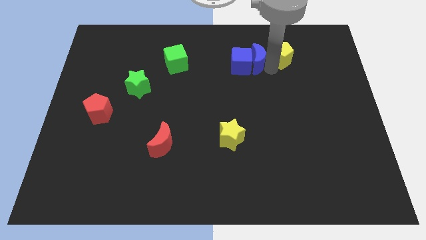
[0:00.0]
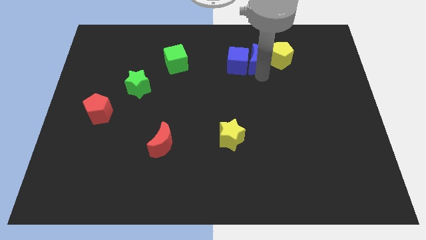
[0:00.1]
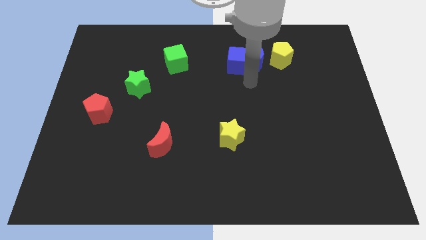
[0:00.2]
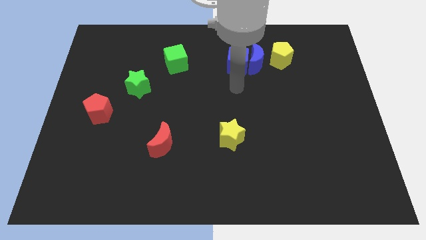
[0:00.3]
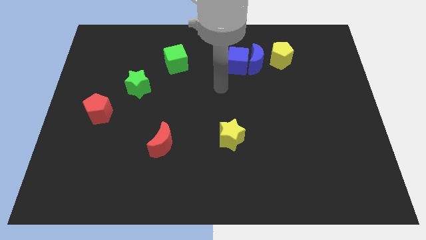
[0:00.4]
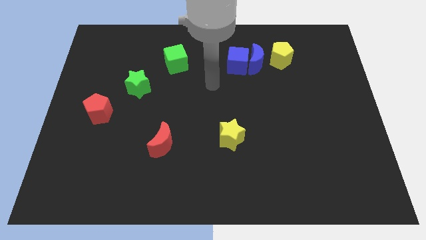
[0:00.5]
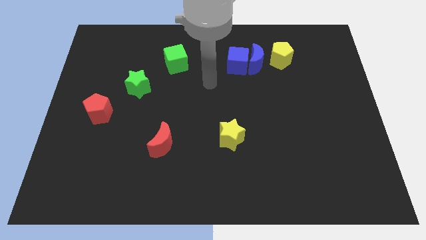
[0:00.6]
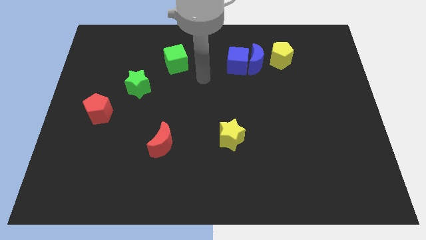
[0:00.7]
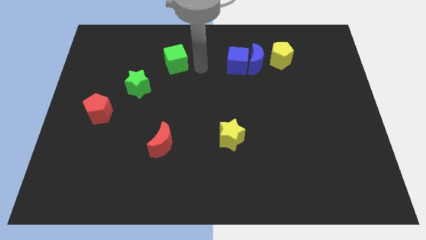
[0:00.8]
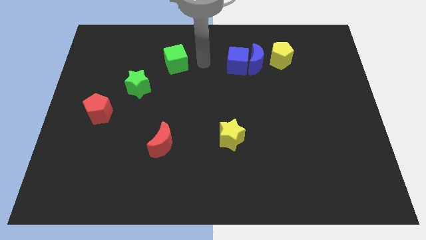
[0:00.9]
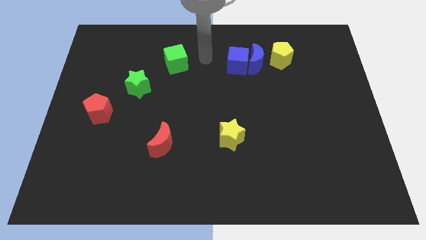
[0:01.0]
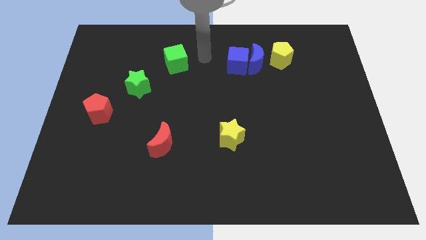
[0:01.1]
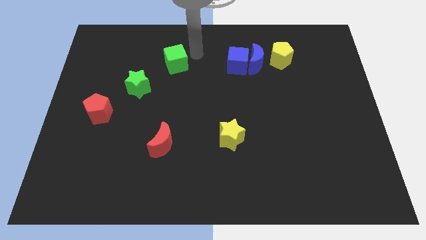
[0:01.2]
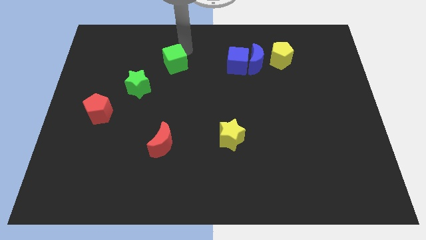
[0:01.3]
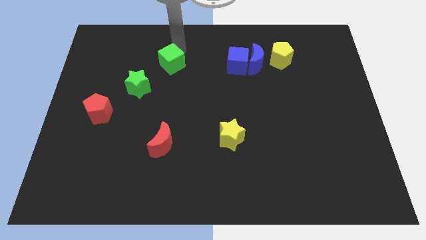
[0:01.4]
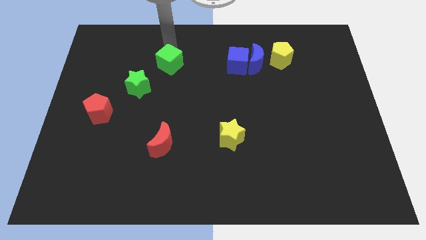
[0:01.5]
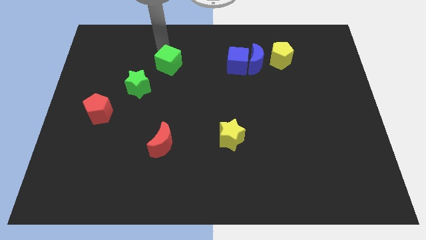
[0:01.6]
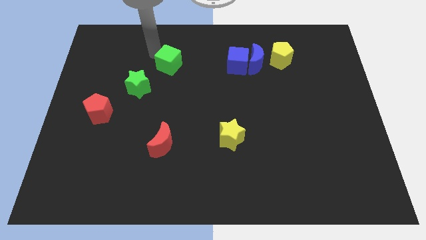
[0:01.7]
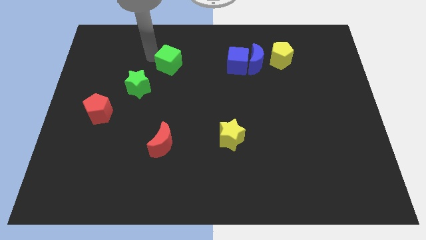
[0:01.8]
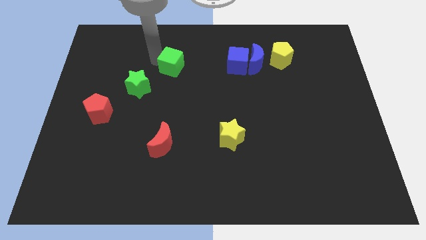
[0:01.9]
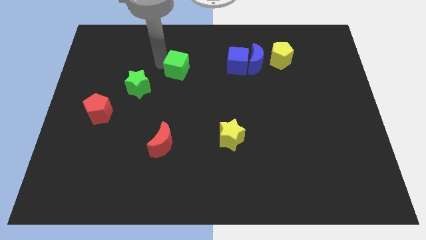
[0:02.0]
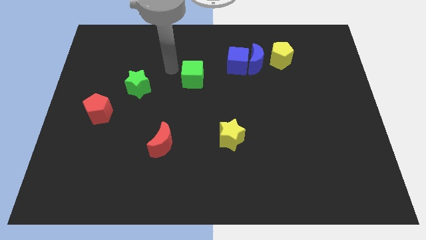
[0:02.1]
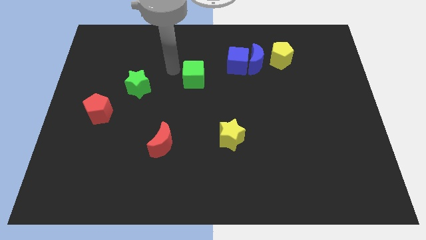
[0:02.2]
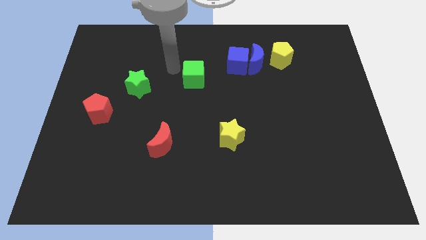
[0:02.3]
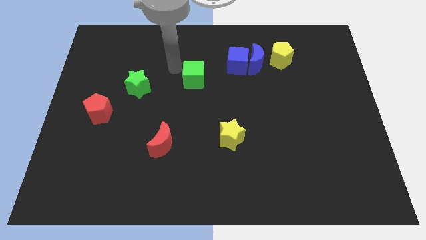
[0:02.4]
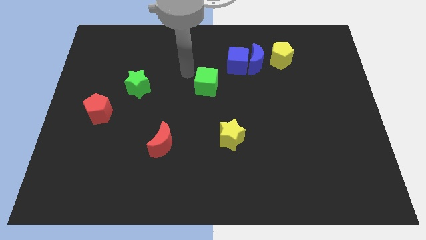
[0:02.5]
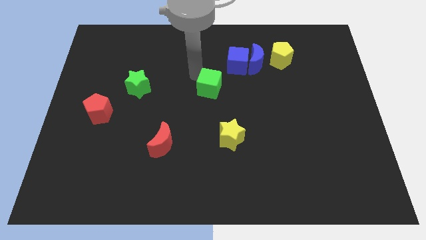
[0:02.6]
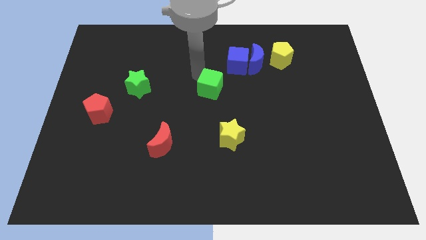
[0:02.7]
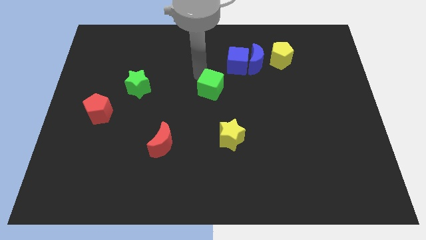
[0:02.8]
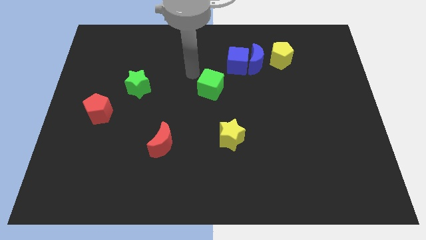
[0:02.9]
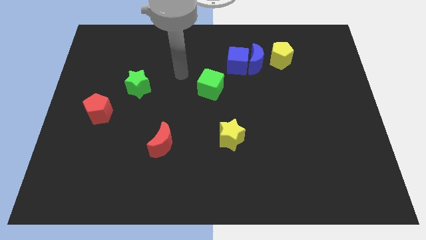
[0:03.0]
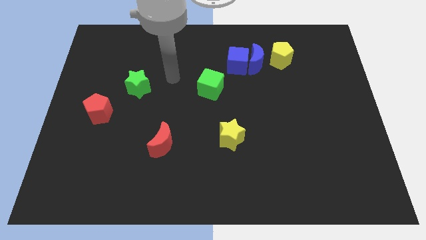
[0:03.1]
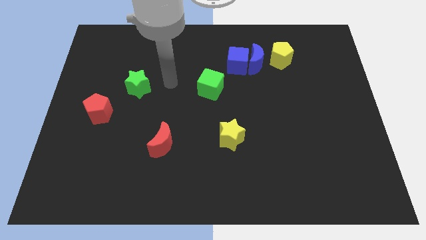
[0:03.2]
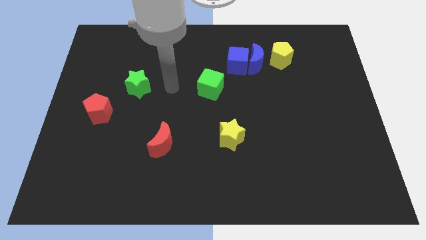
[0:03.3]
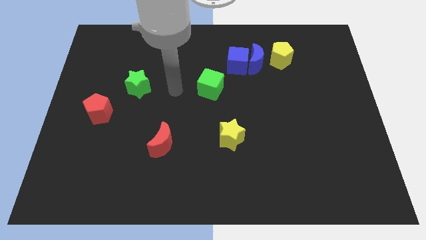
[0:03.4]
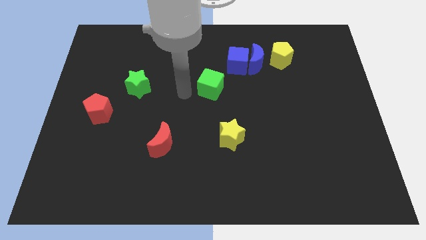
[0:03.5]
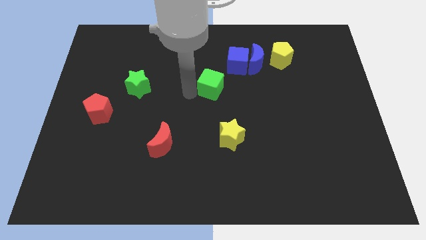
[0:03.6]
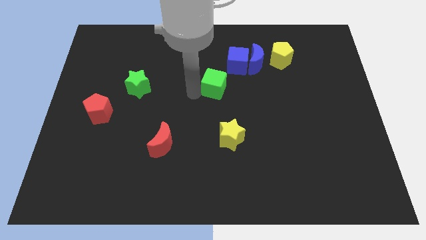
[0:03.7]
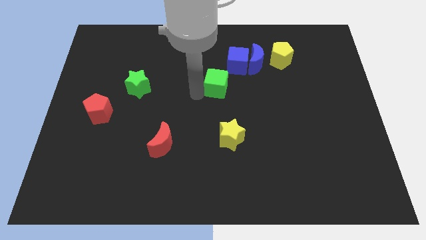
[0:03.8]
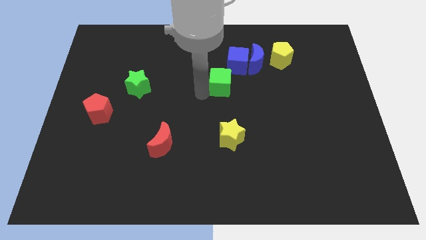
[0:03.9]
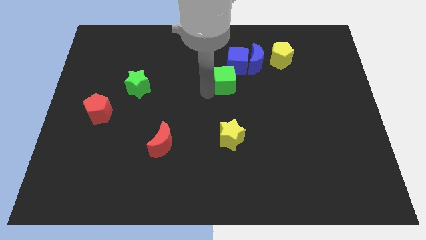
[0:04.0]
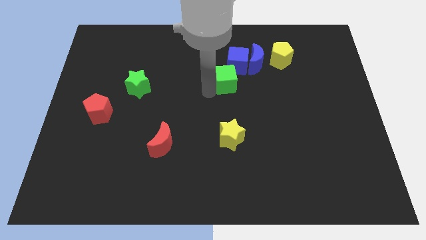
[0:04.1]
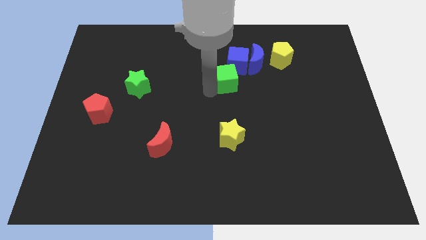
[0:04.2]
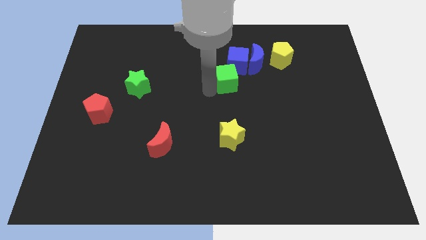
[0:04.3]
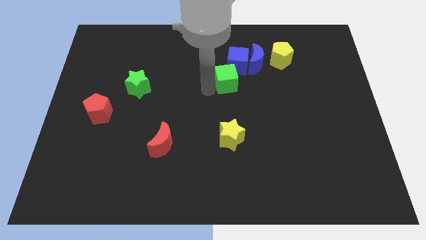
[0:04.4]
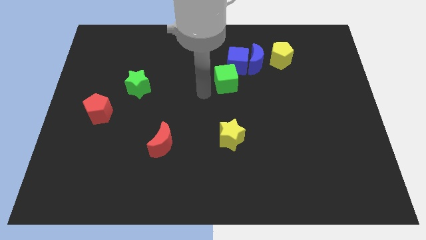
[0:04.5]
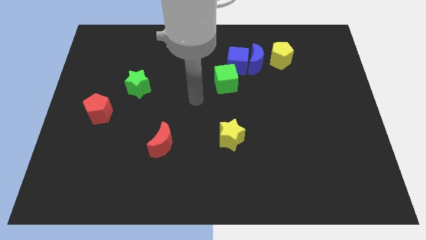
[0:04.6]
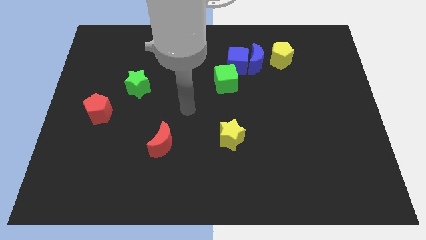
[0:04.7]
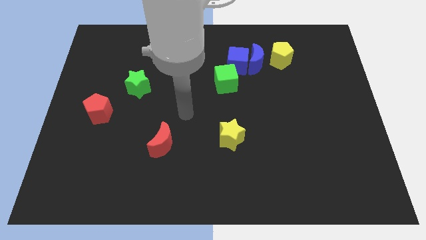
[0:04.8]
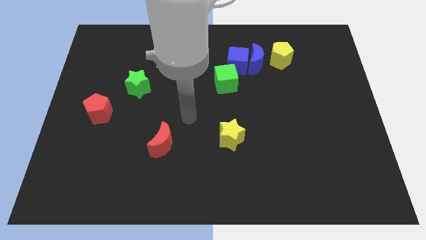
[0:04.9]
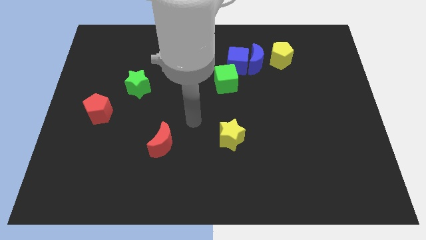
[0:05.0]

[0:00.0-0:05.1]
place the green cube at the bottom left side of blue cube

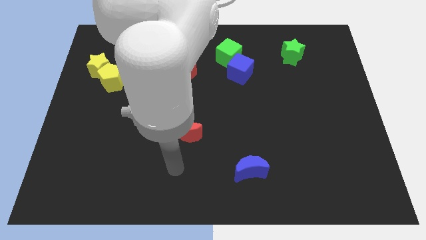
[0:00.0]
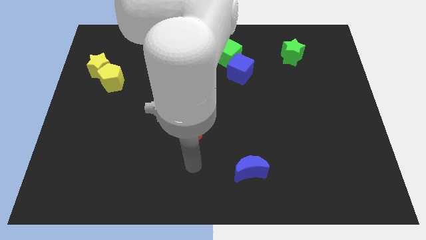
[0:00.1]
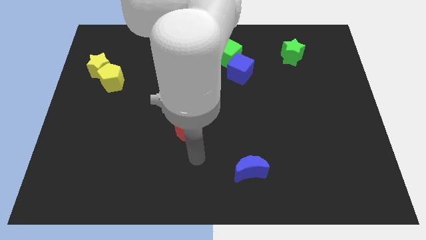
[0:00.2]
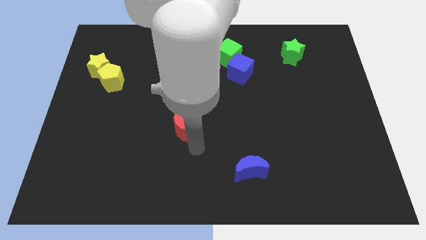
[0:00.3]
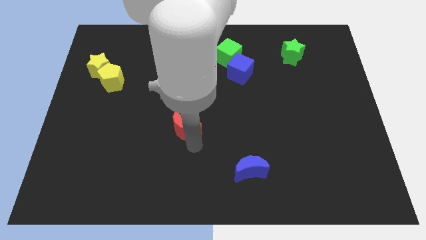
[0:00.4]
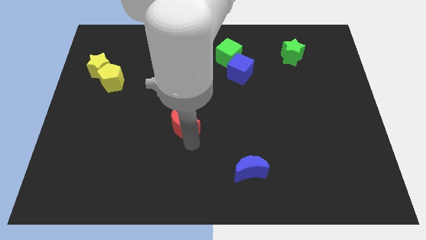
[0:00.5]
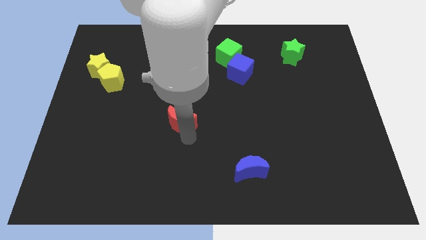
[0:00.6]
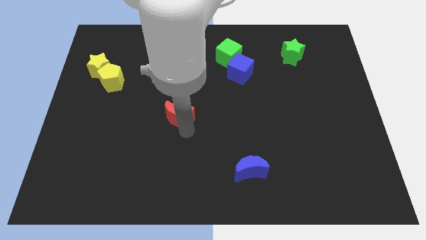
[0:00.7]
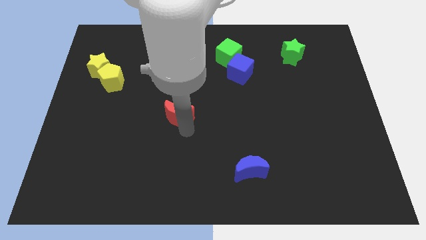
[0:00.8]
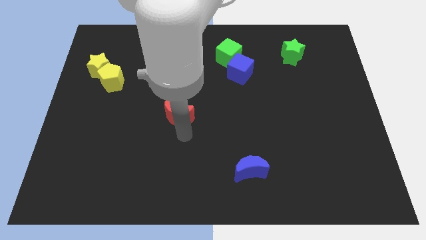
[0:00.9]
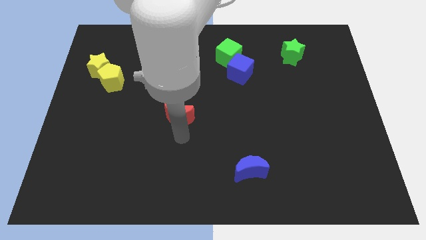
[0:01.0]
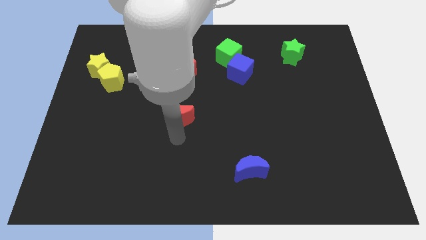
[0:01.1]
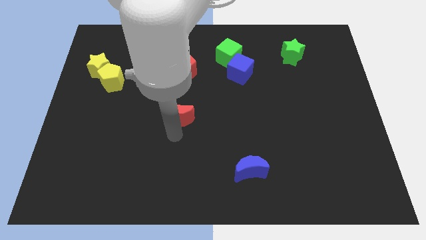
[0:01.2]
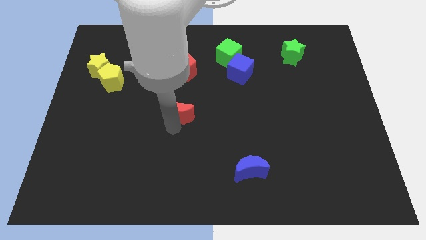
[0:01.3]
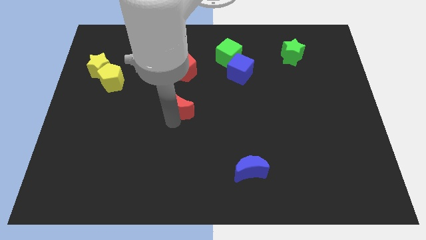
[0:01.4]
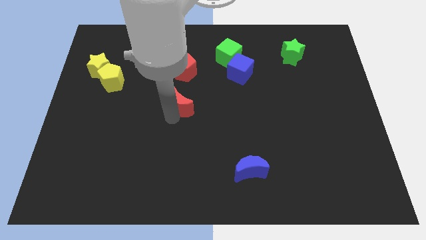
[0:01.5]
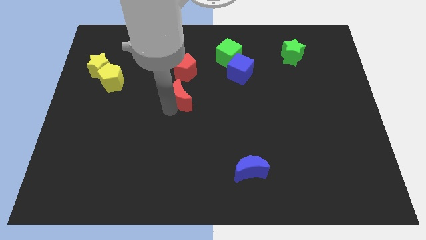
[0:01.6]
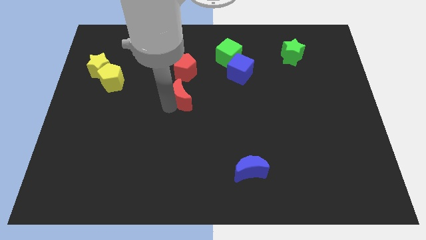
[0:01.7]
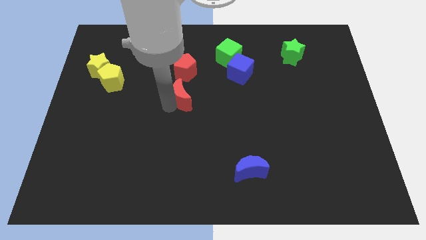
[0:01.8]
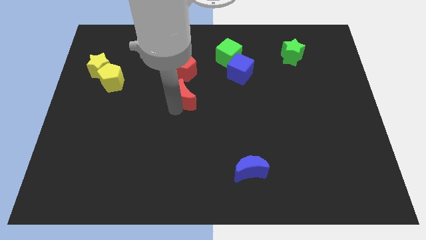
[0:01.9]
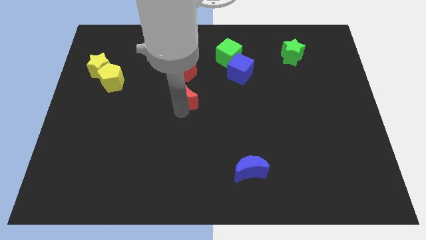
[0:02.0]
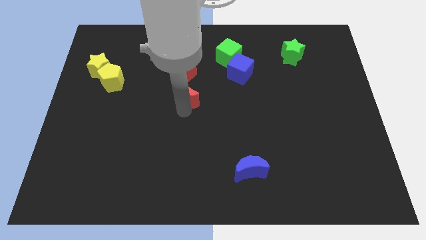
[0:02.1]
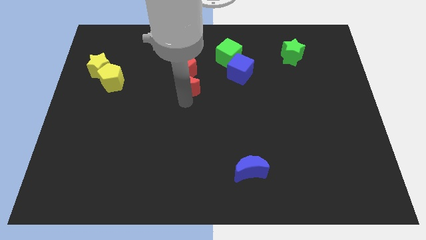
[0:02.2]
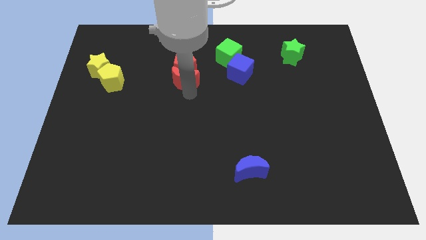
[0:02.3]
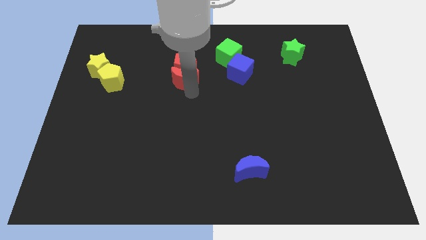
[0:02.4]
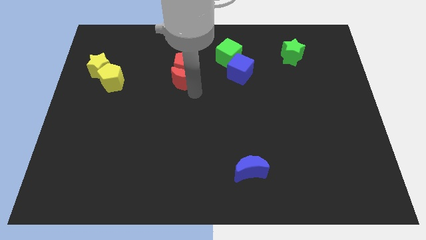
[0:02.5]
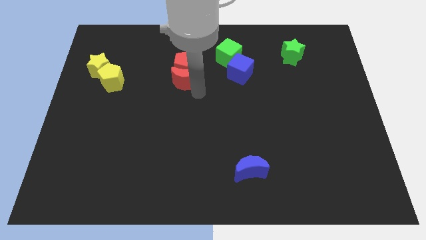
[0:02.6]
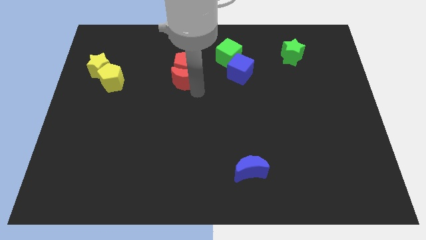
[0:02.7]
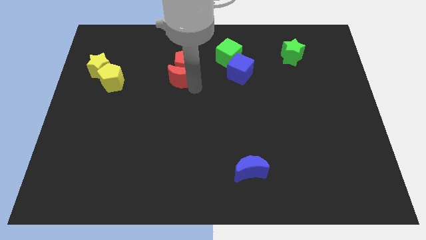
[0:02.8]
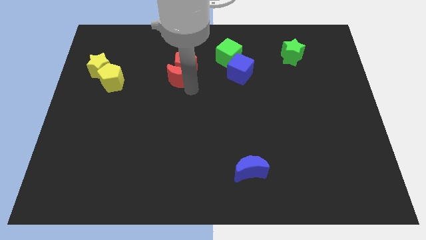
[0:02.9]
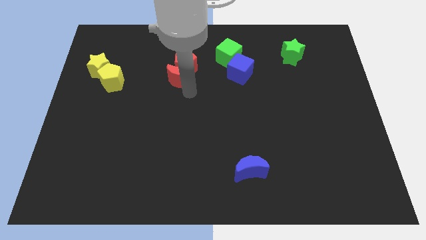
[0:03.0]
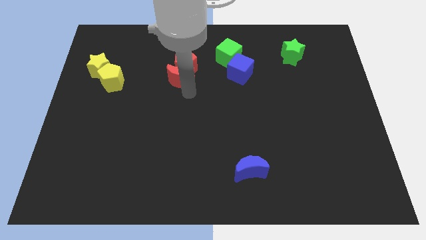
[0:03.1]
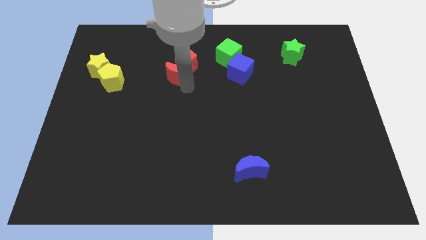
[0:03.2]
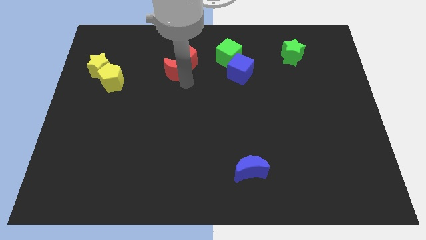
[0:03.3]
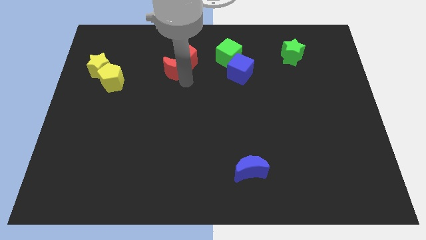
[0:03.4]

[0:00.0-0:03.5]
place the red moon below the red pentagon

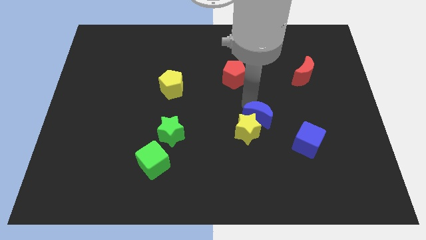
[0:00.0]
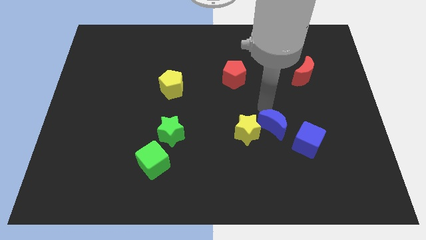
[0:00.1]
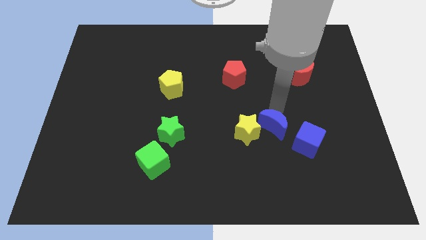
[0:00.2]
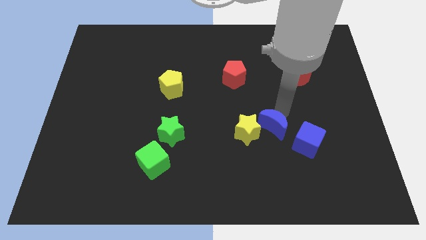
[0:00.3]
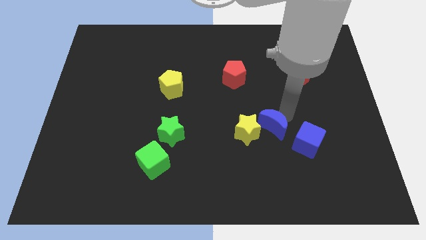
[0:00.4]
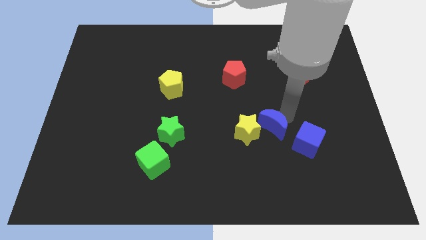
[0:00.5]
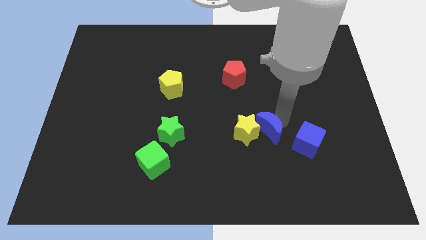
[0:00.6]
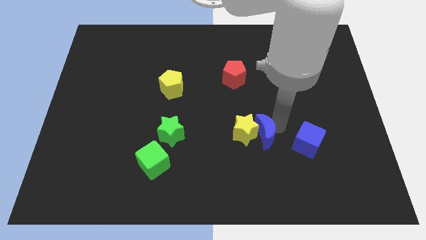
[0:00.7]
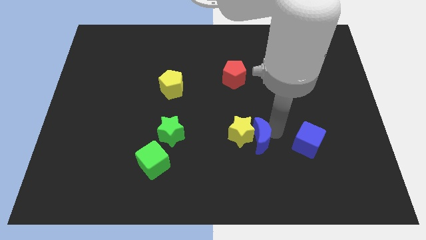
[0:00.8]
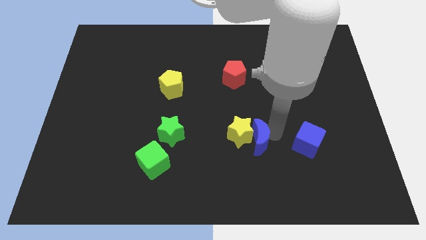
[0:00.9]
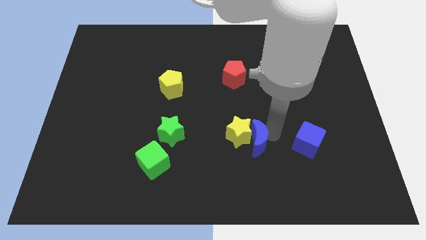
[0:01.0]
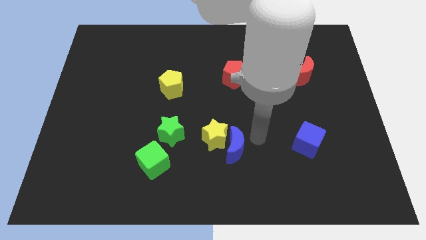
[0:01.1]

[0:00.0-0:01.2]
slide blue moon and the yellow star vertically below the red pentagon
